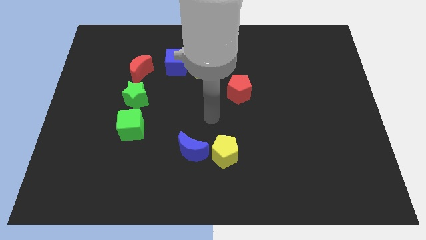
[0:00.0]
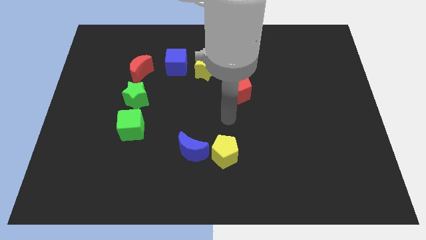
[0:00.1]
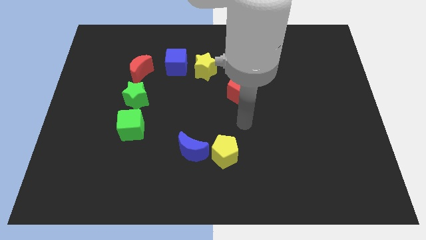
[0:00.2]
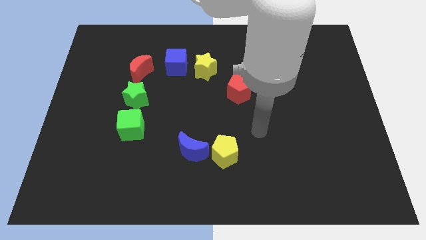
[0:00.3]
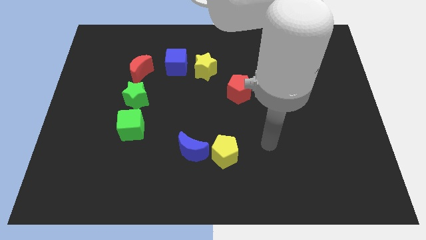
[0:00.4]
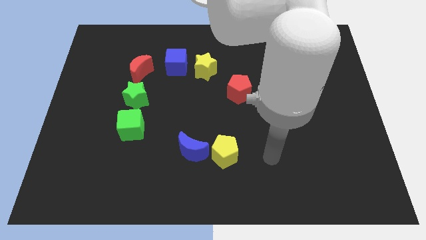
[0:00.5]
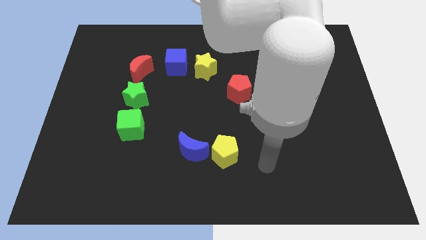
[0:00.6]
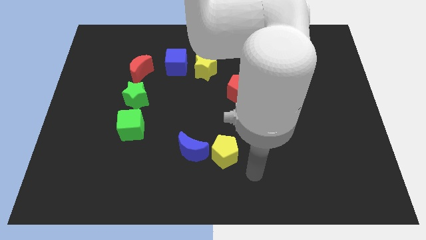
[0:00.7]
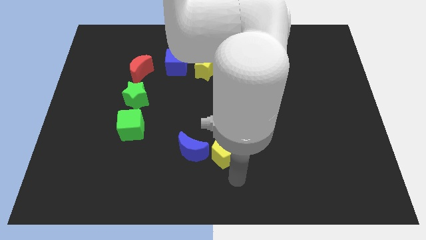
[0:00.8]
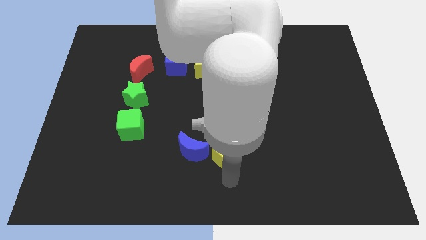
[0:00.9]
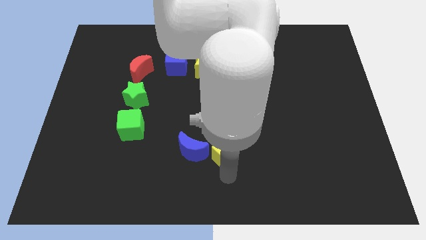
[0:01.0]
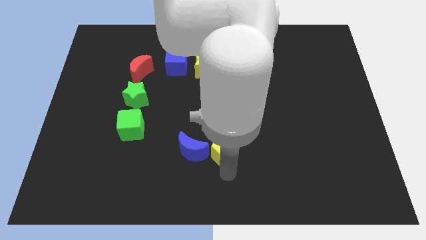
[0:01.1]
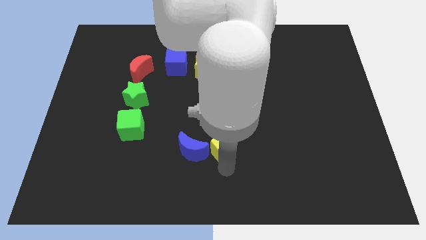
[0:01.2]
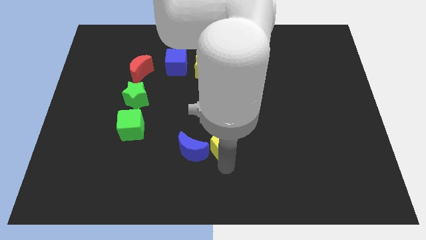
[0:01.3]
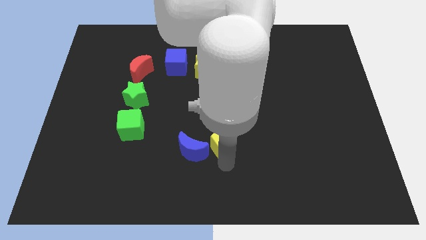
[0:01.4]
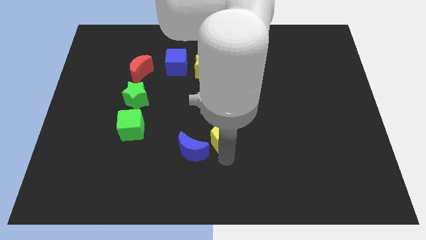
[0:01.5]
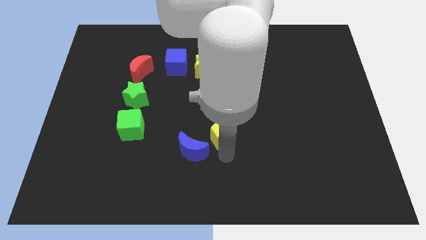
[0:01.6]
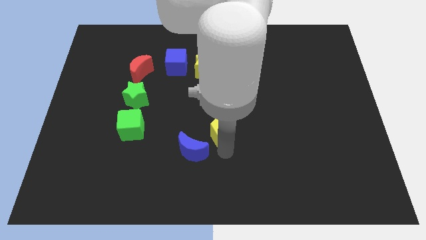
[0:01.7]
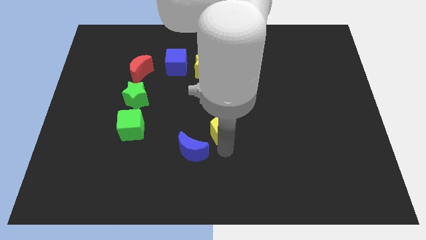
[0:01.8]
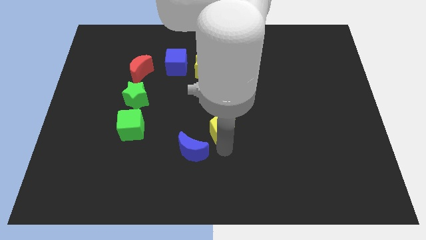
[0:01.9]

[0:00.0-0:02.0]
move the yellow pentagon slightly up

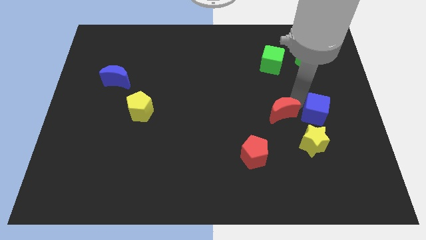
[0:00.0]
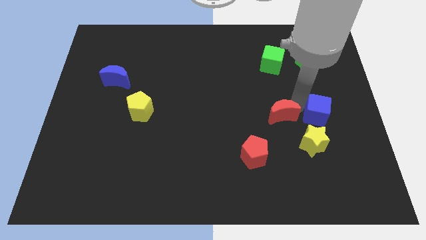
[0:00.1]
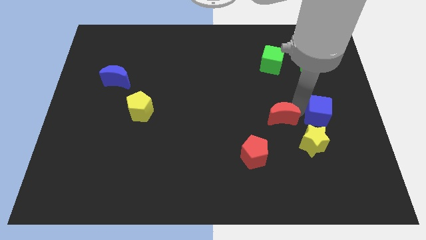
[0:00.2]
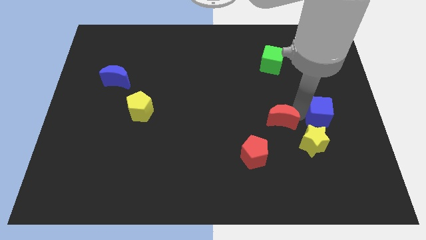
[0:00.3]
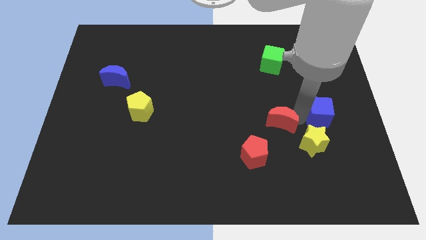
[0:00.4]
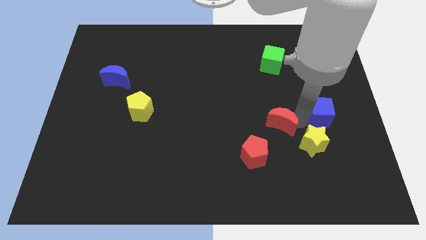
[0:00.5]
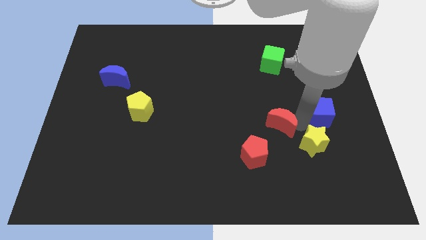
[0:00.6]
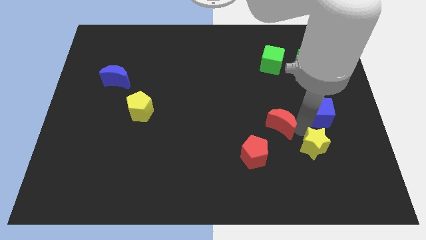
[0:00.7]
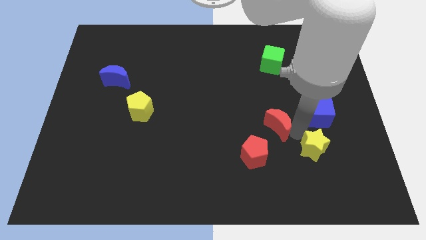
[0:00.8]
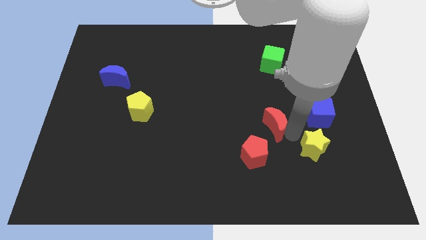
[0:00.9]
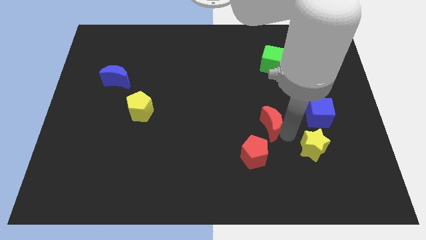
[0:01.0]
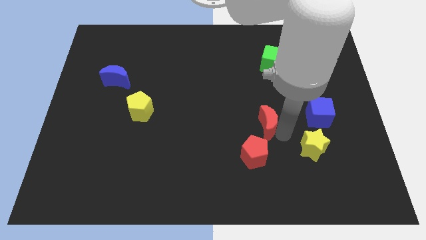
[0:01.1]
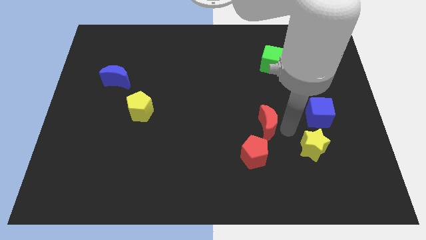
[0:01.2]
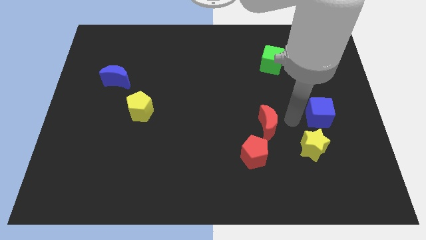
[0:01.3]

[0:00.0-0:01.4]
drag the red moon slightly downwards

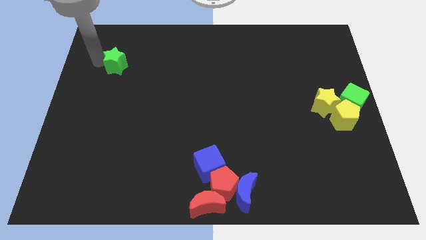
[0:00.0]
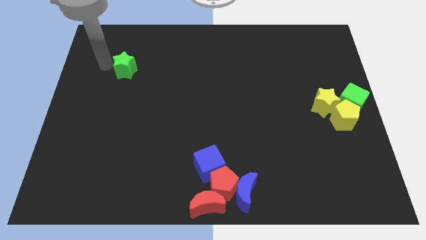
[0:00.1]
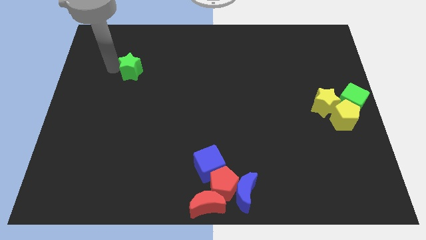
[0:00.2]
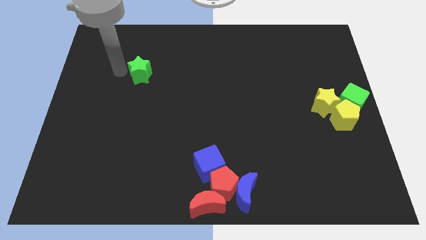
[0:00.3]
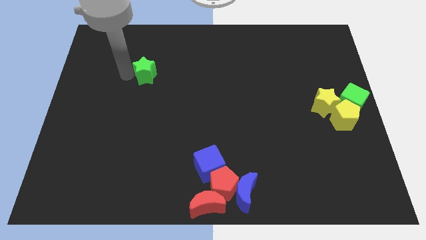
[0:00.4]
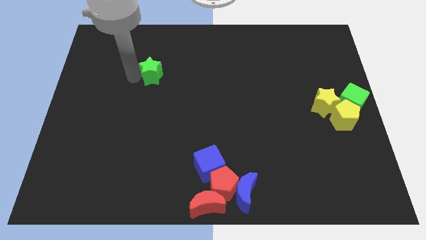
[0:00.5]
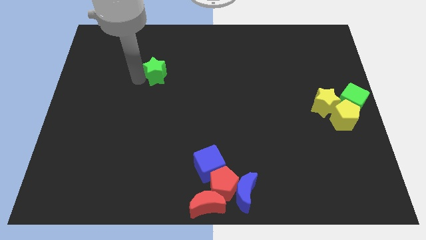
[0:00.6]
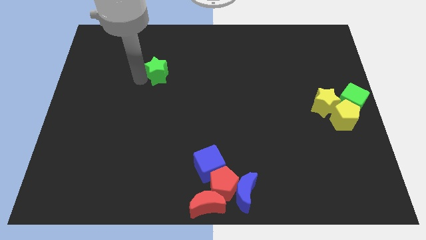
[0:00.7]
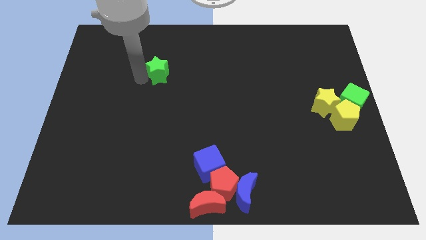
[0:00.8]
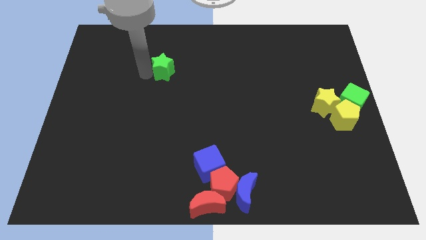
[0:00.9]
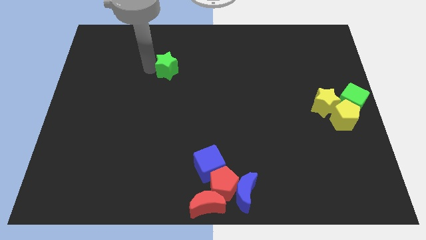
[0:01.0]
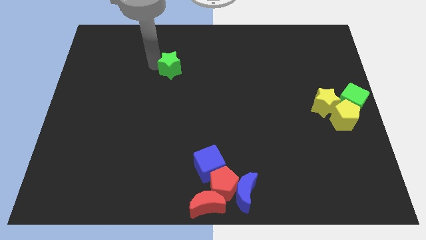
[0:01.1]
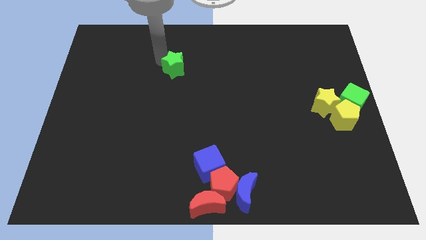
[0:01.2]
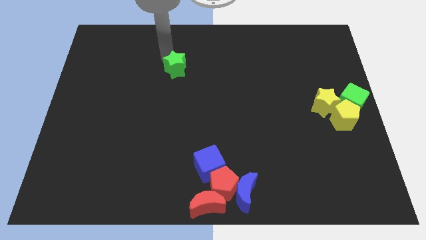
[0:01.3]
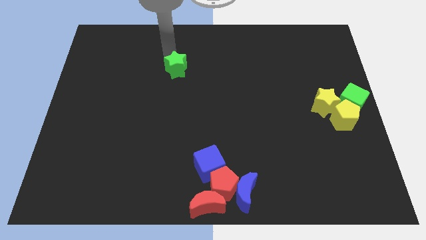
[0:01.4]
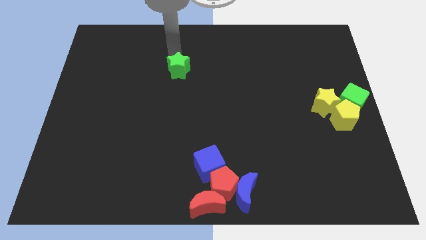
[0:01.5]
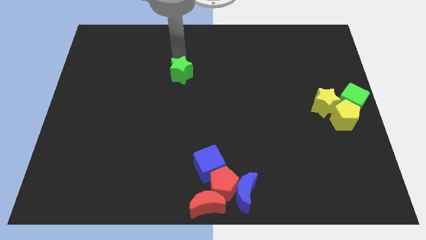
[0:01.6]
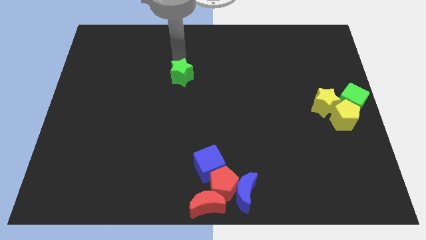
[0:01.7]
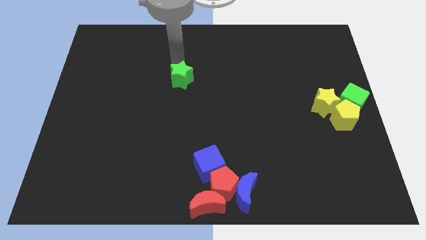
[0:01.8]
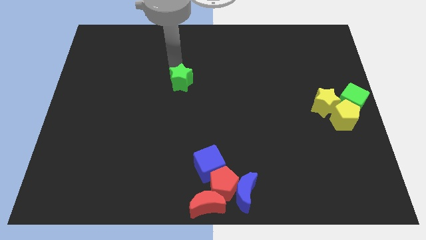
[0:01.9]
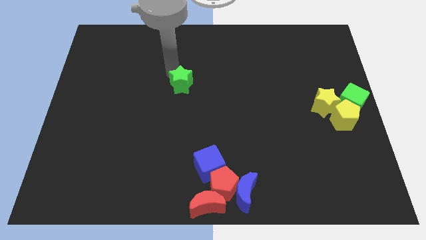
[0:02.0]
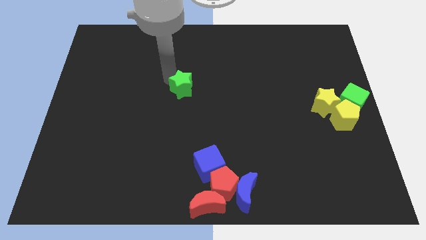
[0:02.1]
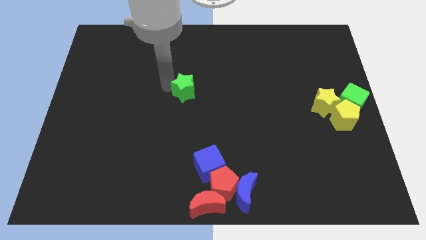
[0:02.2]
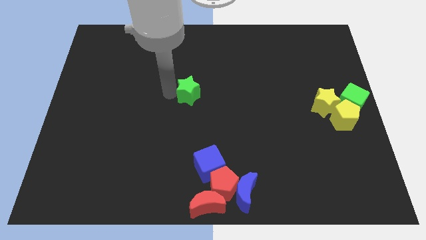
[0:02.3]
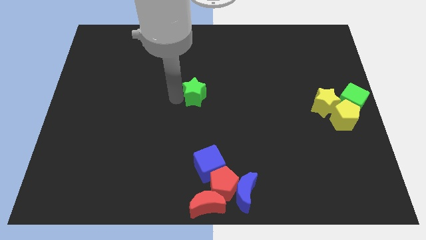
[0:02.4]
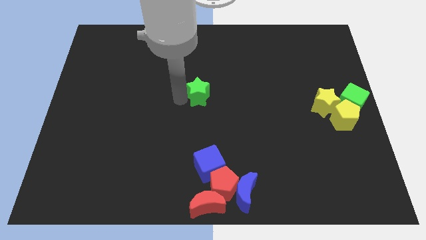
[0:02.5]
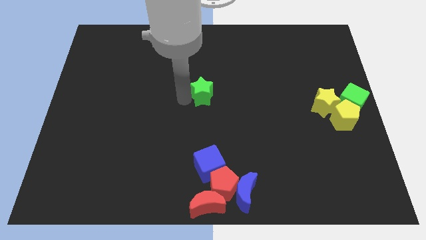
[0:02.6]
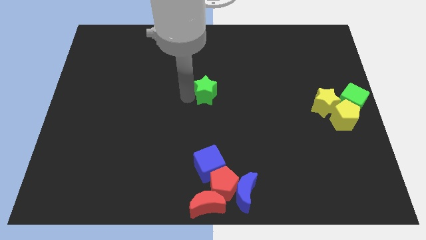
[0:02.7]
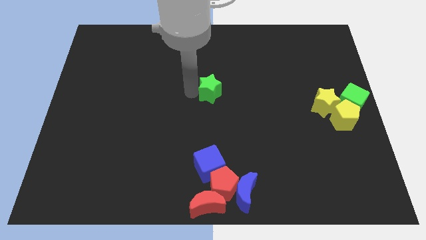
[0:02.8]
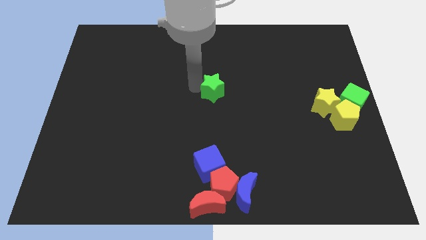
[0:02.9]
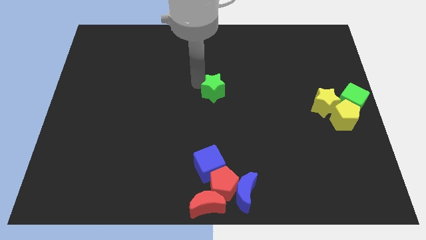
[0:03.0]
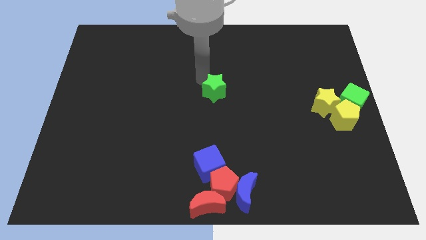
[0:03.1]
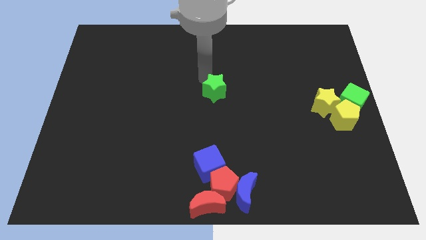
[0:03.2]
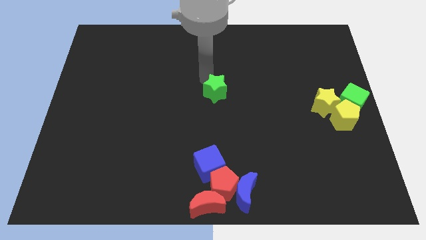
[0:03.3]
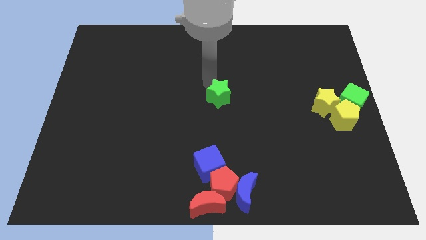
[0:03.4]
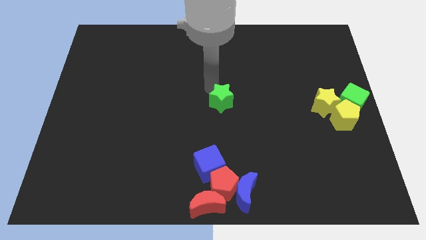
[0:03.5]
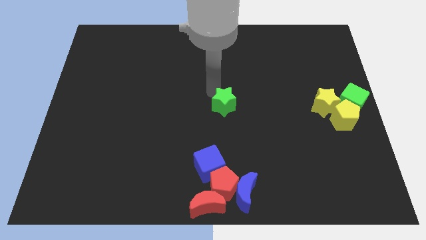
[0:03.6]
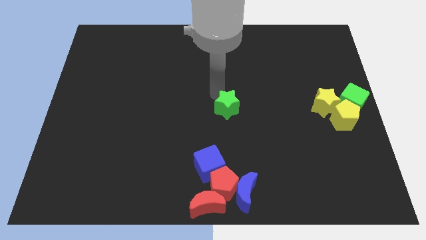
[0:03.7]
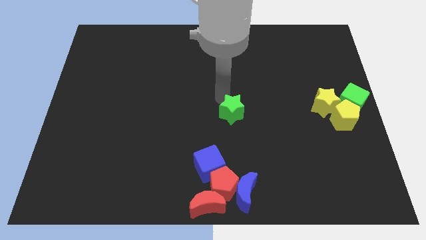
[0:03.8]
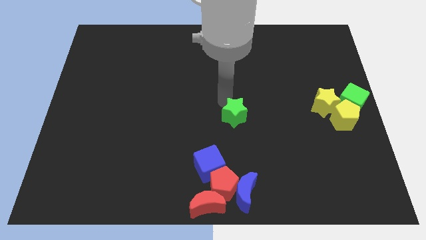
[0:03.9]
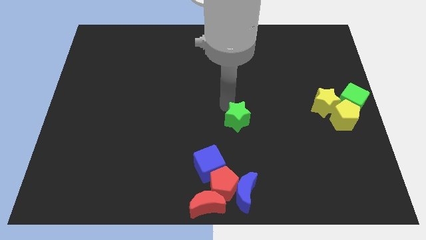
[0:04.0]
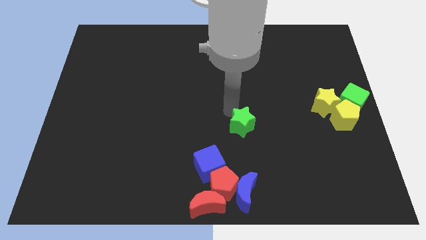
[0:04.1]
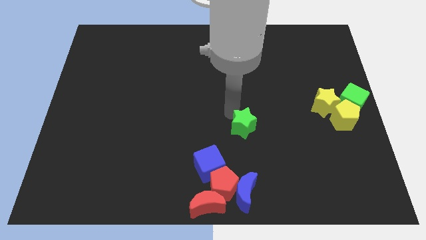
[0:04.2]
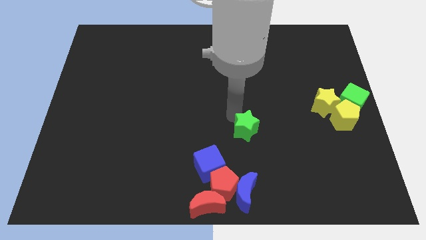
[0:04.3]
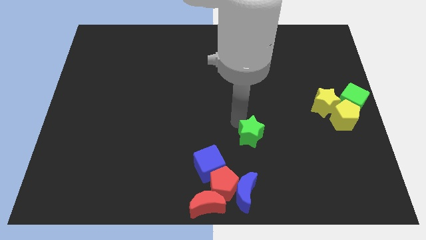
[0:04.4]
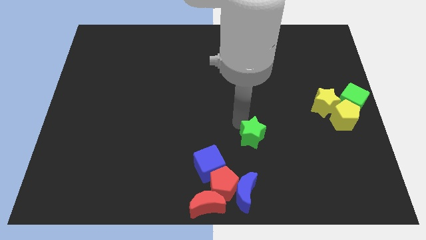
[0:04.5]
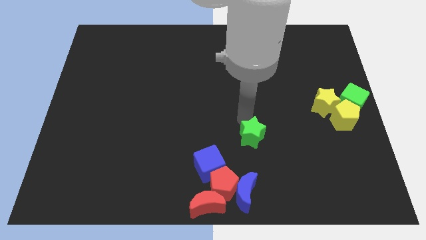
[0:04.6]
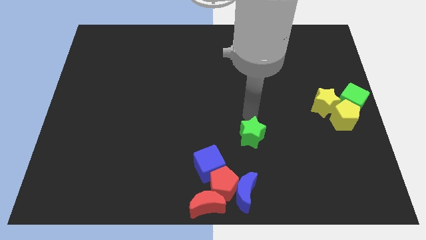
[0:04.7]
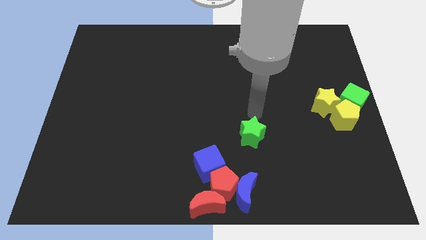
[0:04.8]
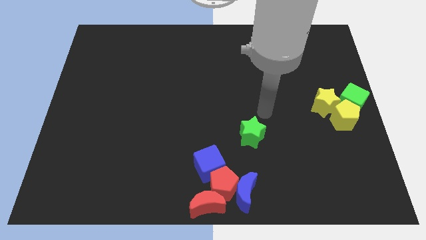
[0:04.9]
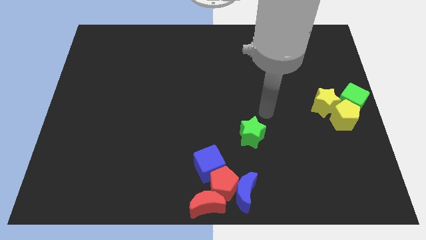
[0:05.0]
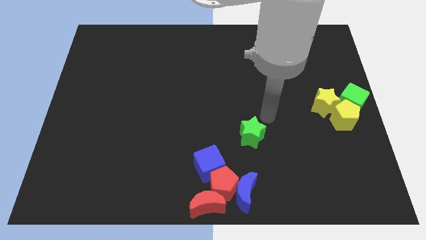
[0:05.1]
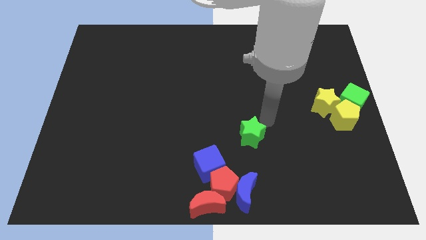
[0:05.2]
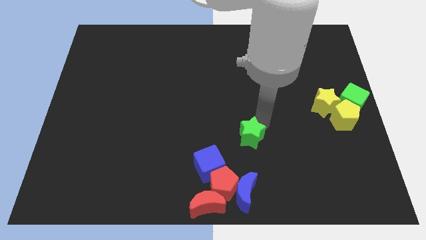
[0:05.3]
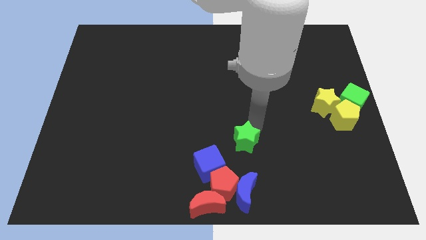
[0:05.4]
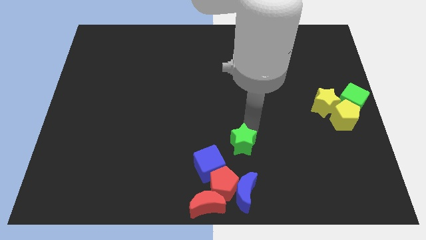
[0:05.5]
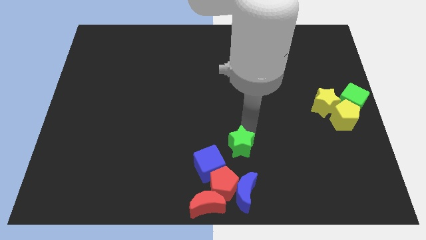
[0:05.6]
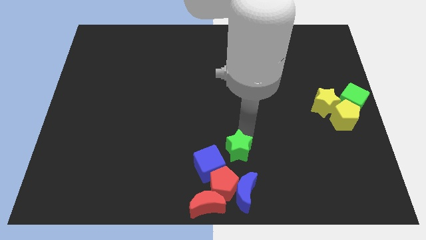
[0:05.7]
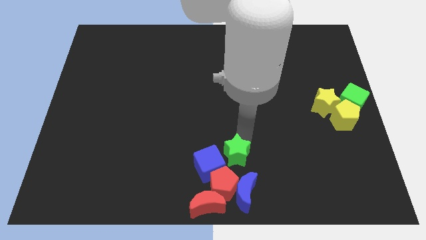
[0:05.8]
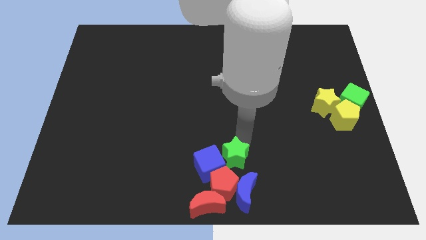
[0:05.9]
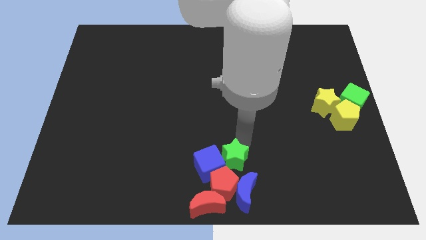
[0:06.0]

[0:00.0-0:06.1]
place the green star above the red pentagon
